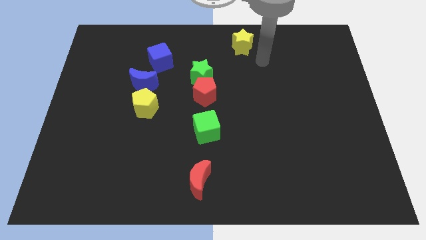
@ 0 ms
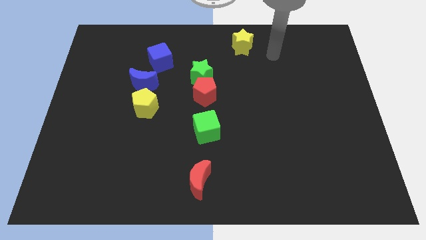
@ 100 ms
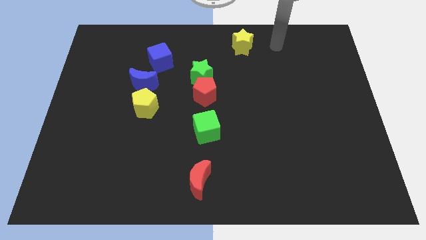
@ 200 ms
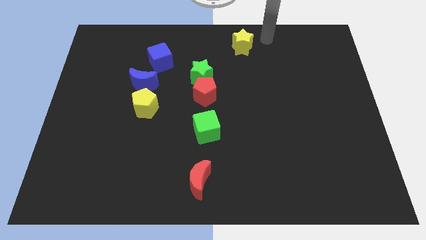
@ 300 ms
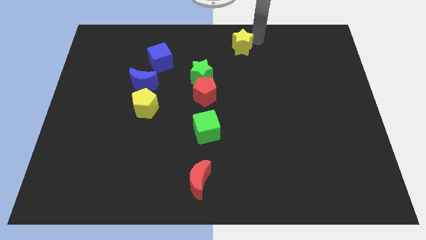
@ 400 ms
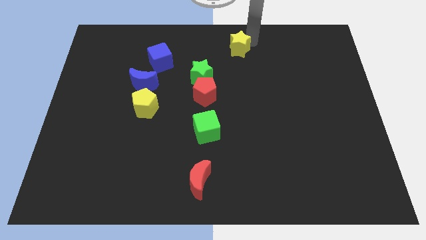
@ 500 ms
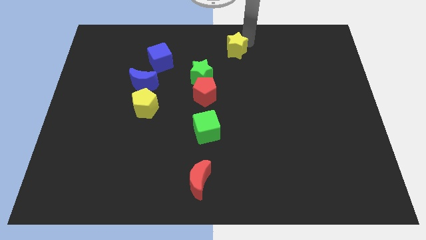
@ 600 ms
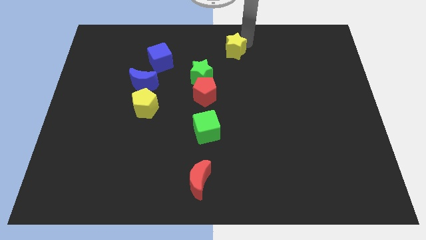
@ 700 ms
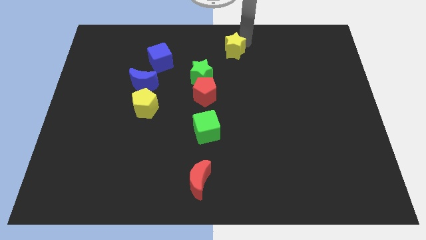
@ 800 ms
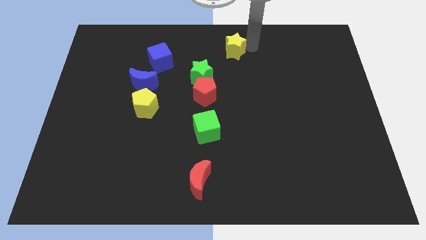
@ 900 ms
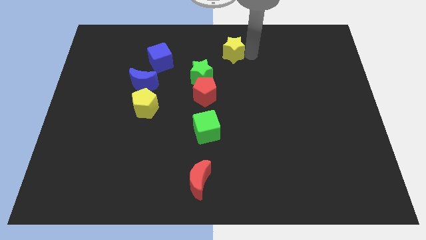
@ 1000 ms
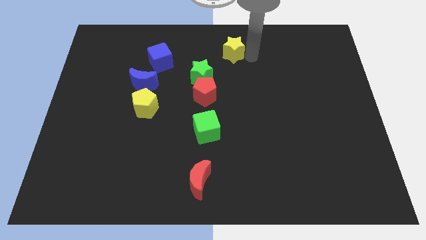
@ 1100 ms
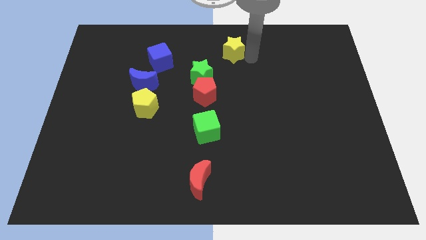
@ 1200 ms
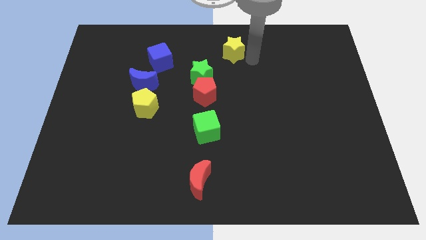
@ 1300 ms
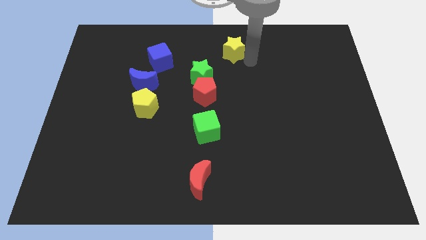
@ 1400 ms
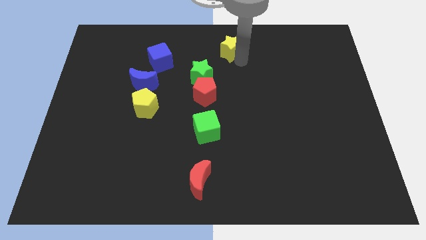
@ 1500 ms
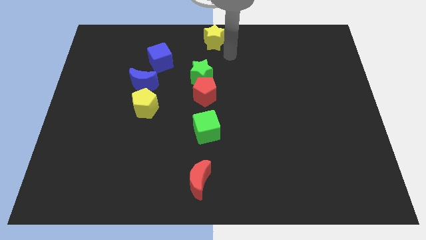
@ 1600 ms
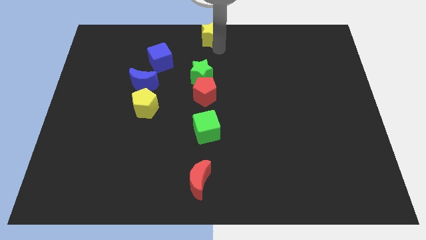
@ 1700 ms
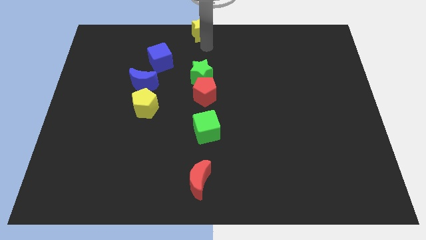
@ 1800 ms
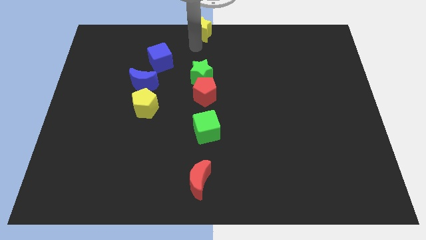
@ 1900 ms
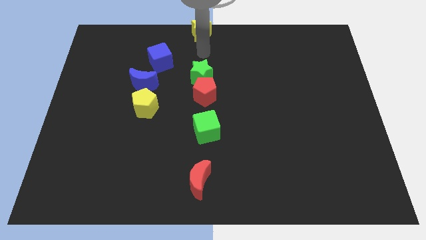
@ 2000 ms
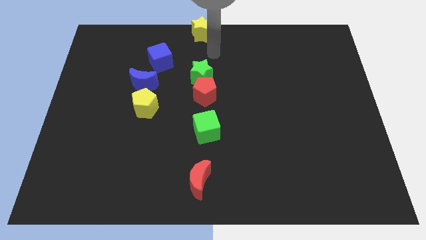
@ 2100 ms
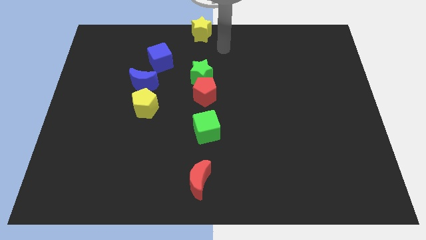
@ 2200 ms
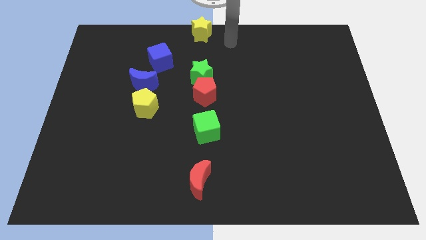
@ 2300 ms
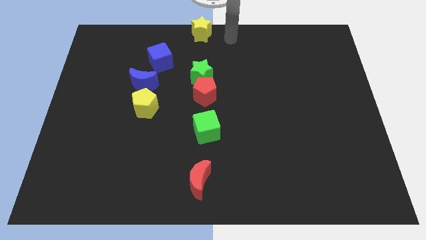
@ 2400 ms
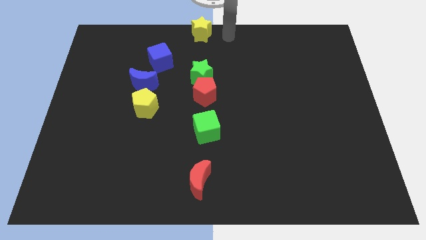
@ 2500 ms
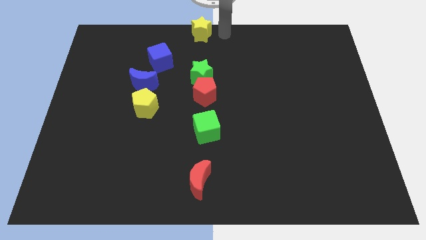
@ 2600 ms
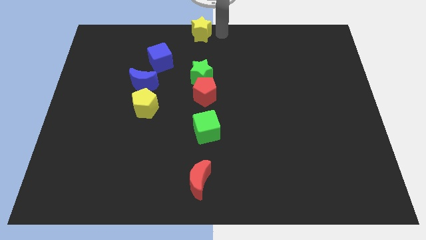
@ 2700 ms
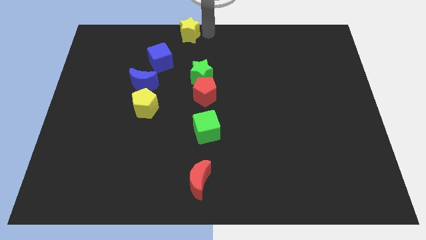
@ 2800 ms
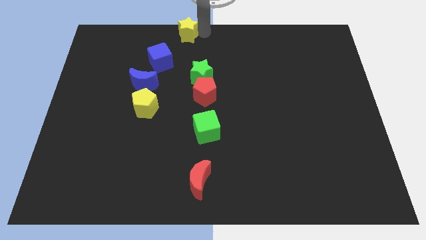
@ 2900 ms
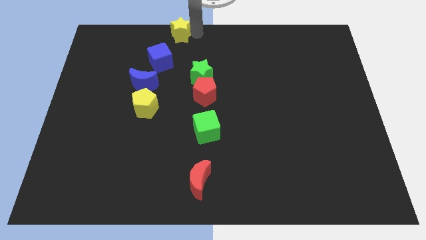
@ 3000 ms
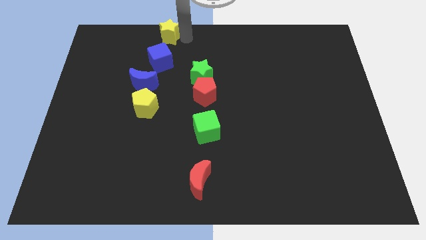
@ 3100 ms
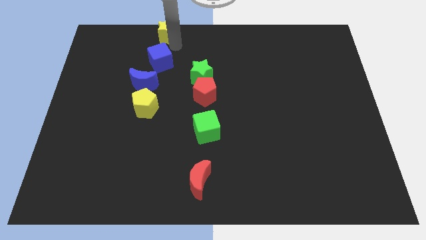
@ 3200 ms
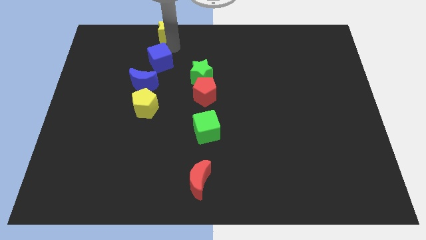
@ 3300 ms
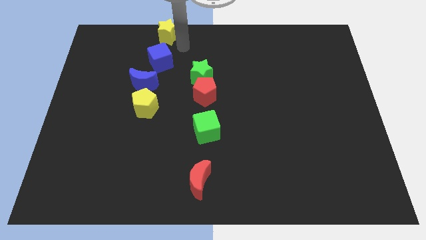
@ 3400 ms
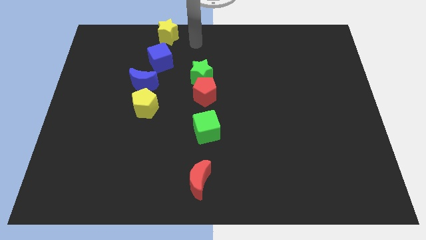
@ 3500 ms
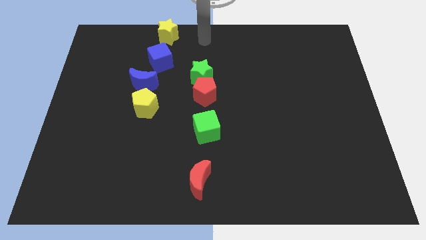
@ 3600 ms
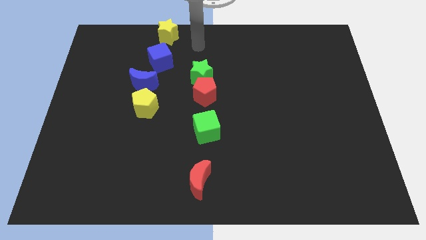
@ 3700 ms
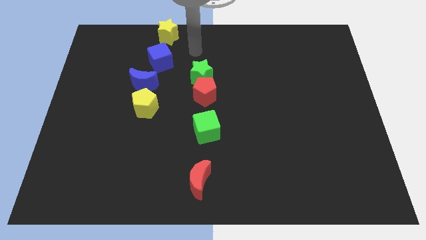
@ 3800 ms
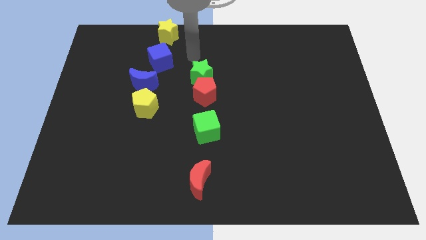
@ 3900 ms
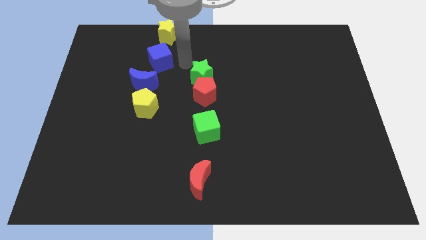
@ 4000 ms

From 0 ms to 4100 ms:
move the yellow star vertically at the top of the blue cube

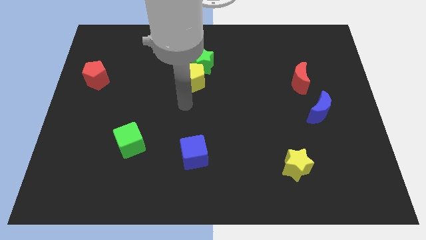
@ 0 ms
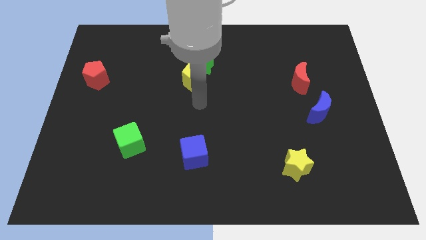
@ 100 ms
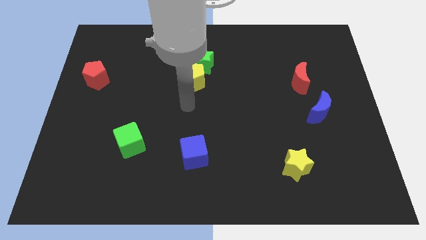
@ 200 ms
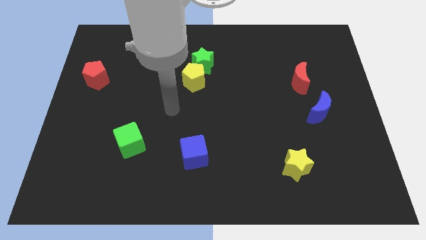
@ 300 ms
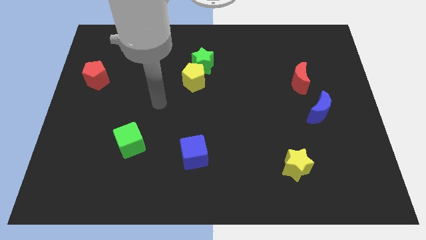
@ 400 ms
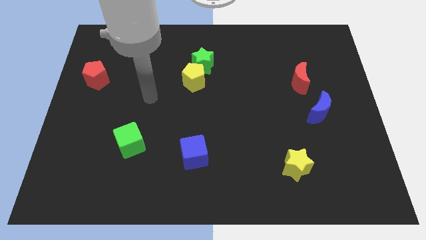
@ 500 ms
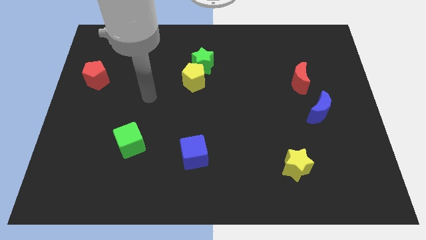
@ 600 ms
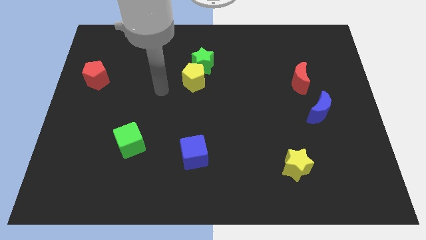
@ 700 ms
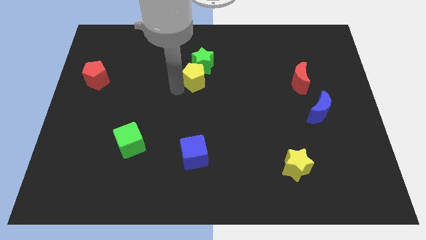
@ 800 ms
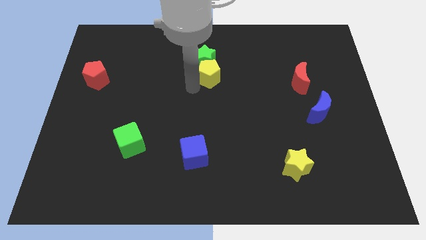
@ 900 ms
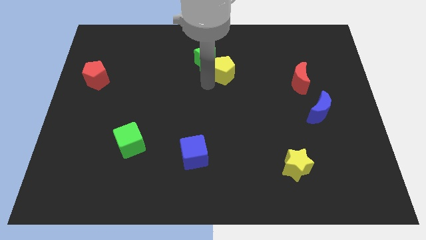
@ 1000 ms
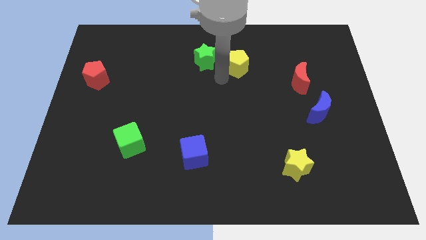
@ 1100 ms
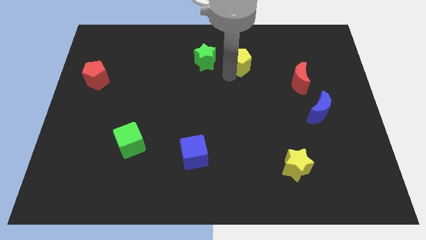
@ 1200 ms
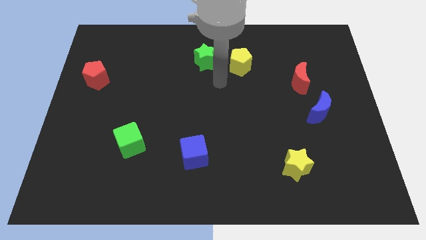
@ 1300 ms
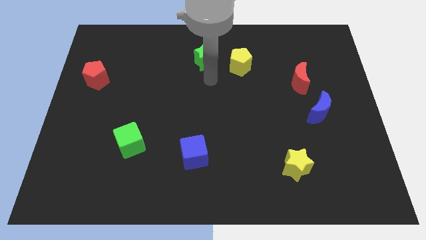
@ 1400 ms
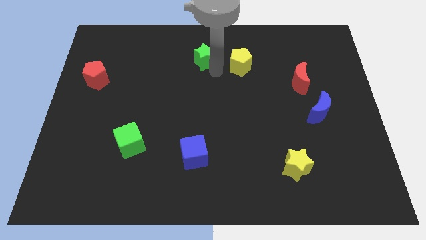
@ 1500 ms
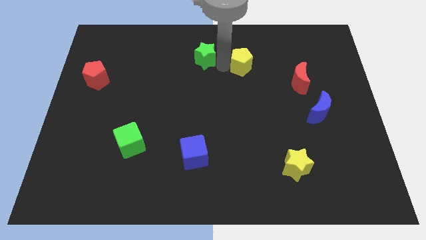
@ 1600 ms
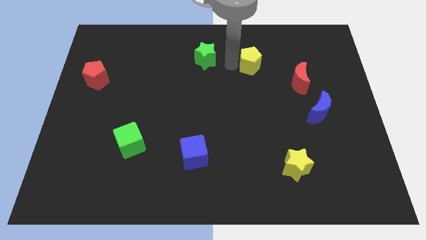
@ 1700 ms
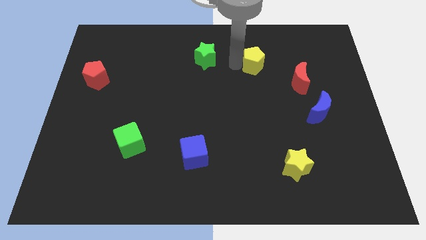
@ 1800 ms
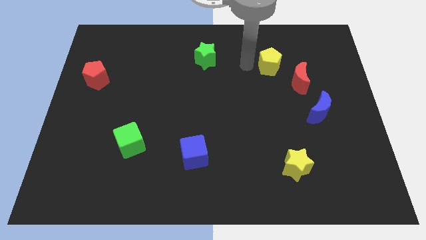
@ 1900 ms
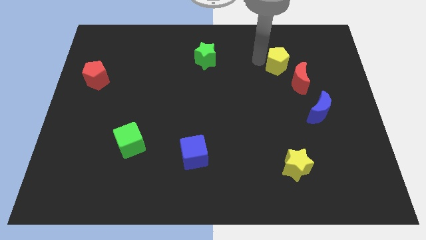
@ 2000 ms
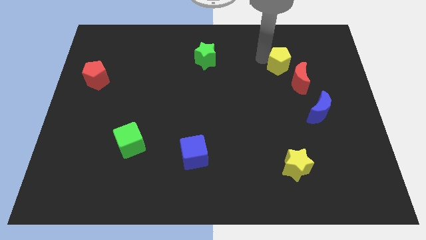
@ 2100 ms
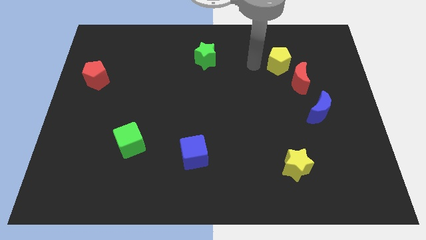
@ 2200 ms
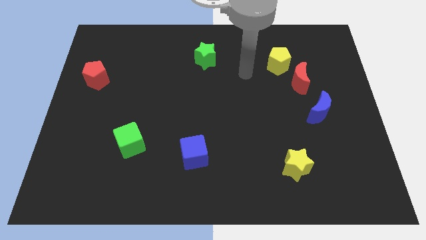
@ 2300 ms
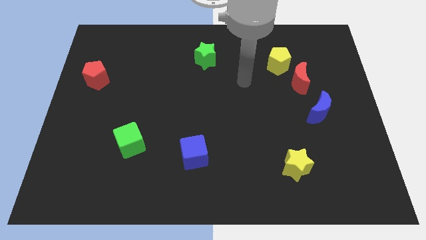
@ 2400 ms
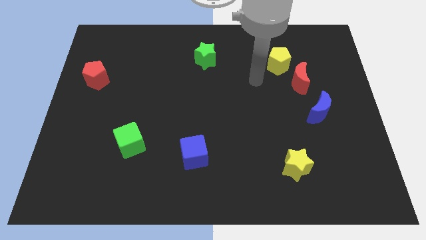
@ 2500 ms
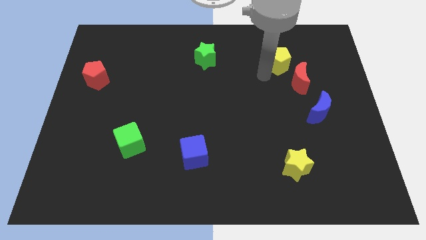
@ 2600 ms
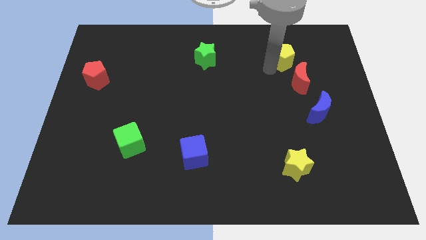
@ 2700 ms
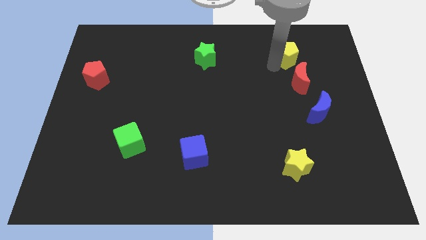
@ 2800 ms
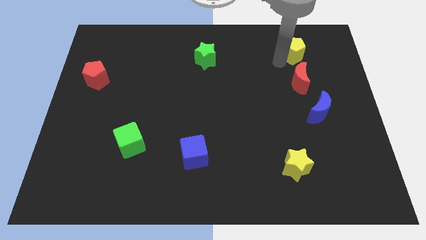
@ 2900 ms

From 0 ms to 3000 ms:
move the yellow pentagon towards the top right side of the board

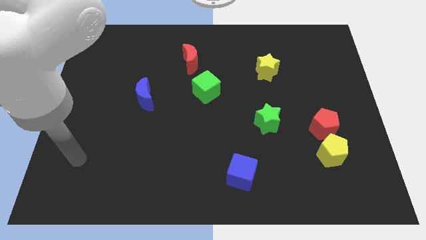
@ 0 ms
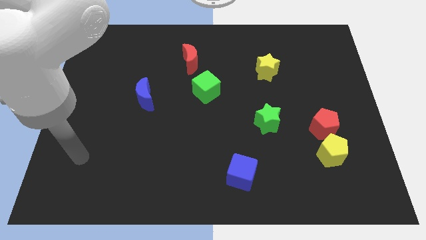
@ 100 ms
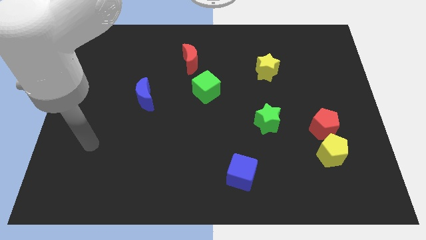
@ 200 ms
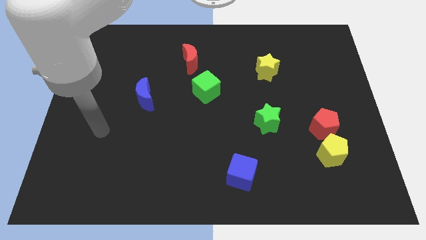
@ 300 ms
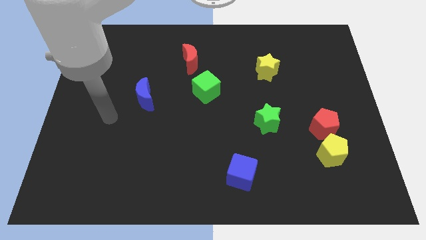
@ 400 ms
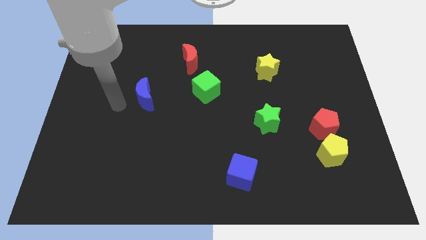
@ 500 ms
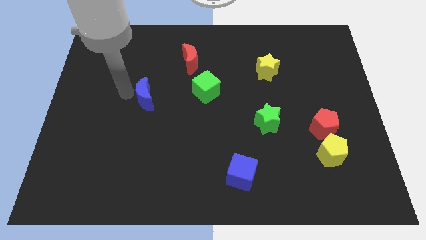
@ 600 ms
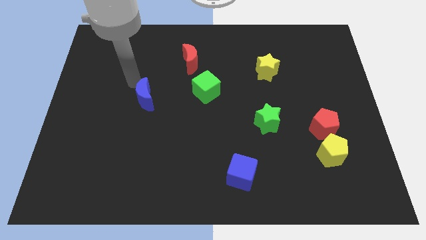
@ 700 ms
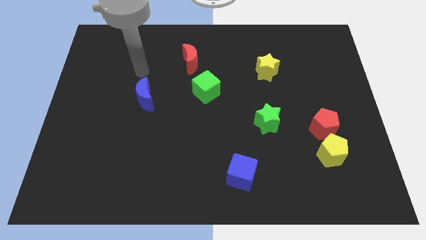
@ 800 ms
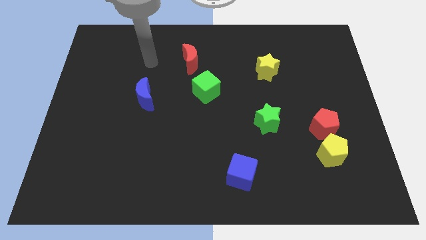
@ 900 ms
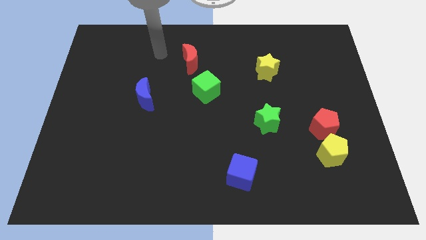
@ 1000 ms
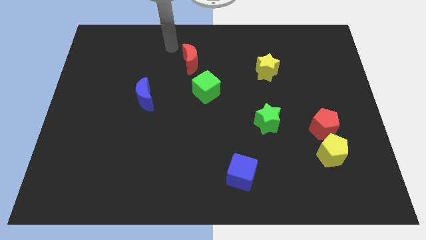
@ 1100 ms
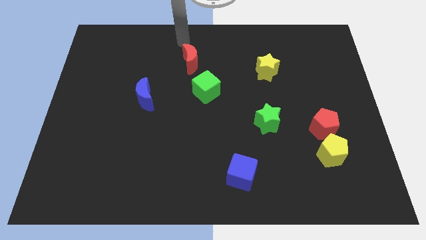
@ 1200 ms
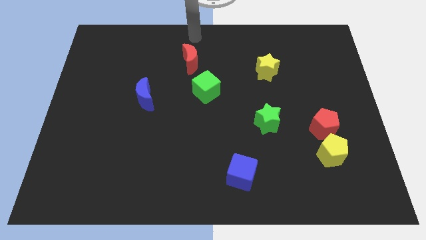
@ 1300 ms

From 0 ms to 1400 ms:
point your arm at the top of the red crescent

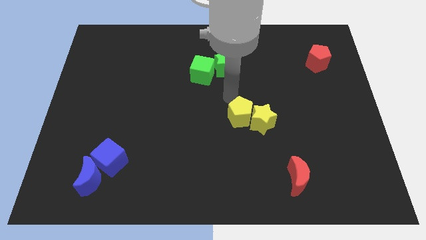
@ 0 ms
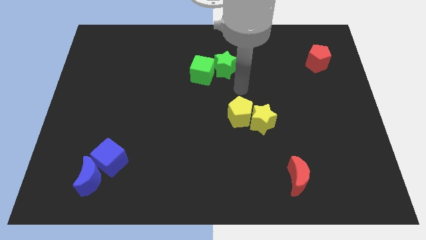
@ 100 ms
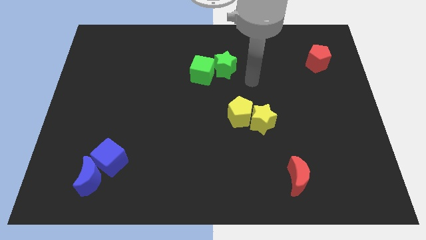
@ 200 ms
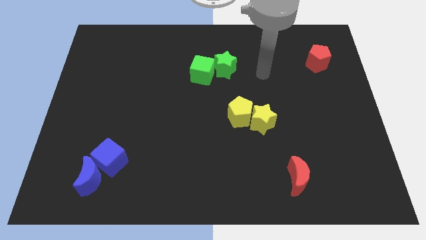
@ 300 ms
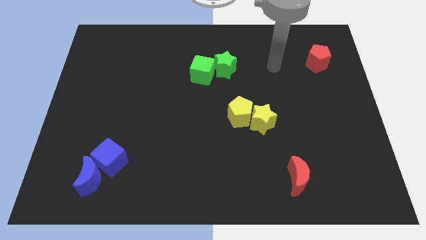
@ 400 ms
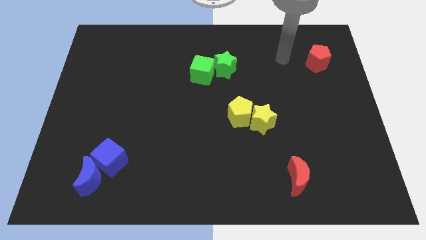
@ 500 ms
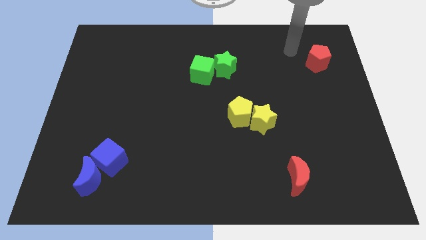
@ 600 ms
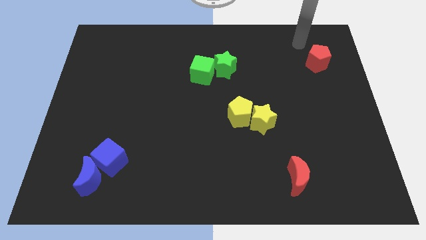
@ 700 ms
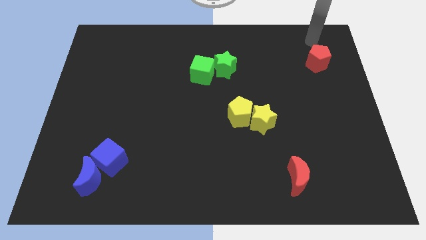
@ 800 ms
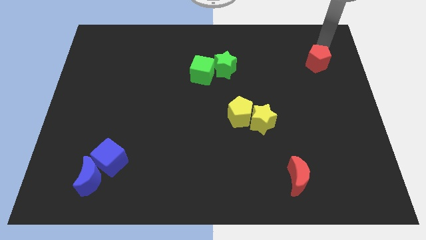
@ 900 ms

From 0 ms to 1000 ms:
move your arm towards the top right corner of the board
